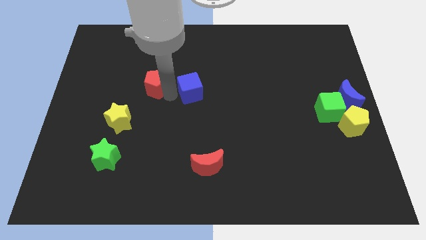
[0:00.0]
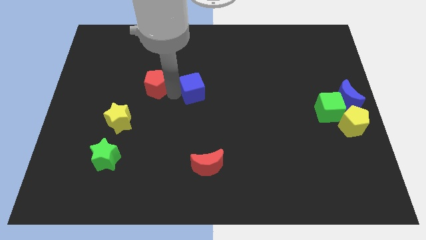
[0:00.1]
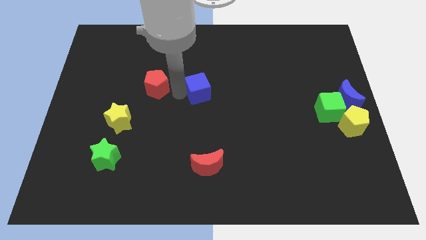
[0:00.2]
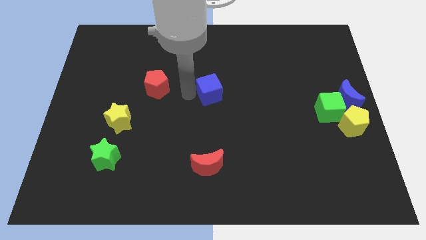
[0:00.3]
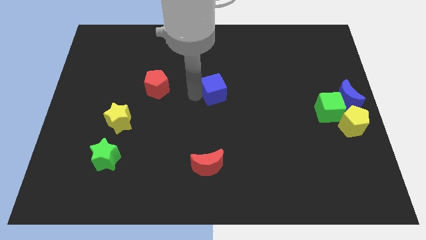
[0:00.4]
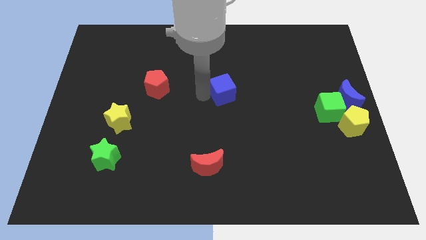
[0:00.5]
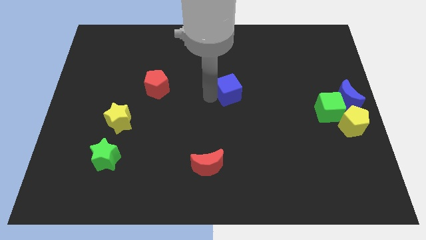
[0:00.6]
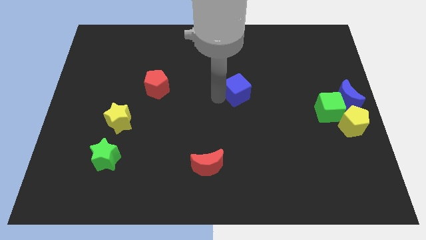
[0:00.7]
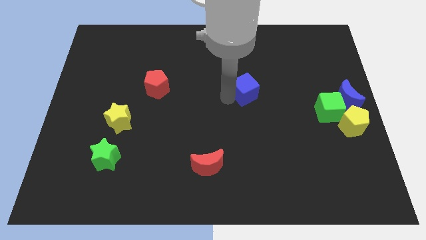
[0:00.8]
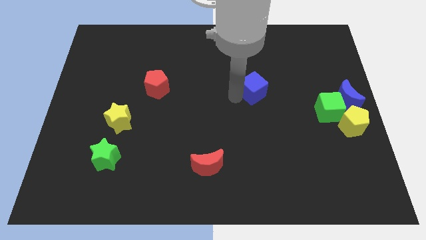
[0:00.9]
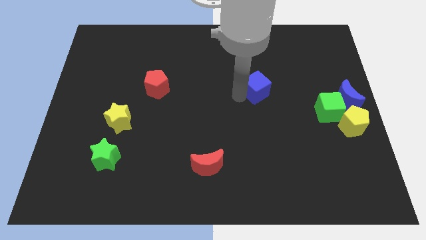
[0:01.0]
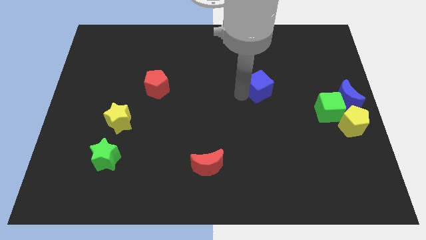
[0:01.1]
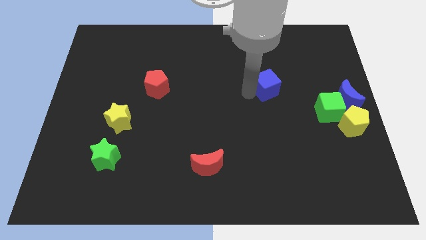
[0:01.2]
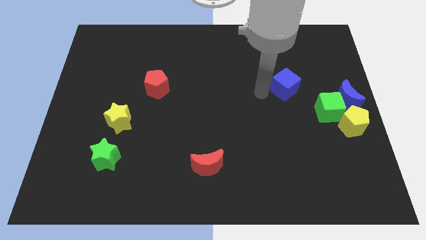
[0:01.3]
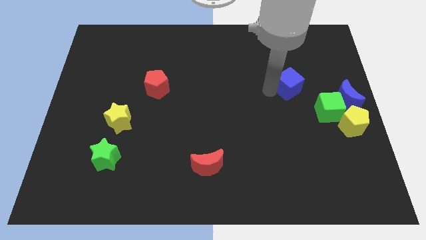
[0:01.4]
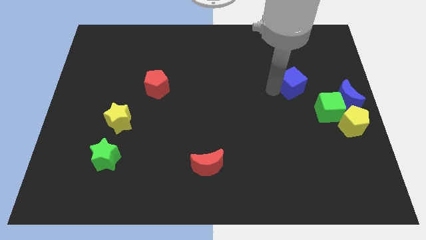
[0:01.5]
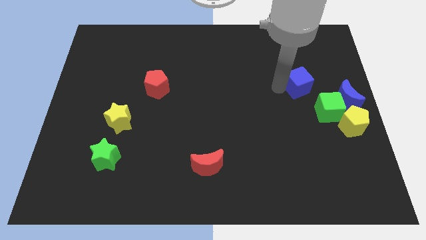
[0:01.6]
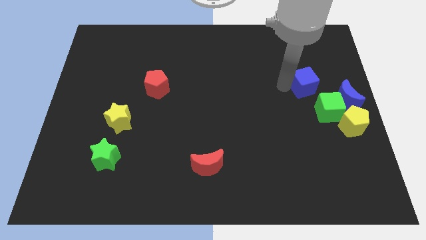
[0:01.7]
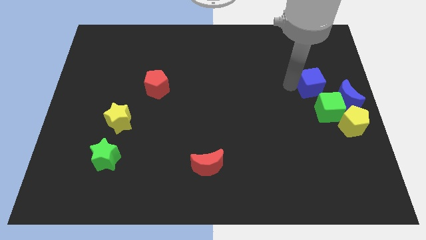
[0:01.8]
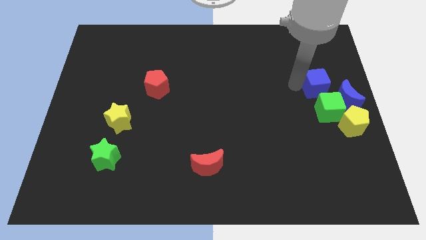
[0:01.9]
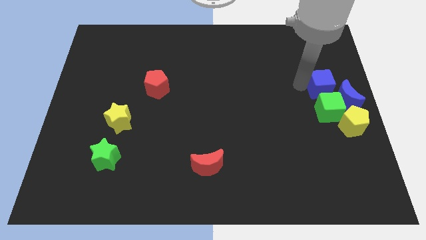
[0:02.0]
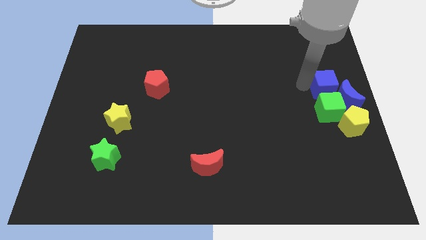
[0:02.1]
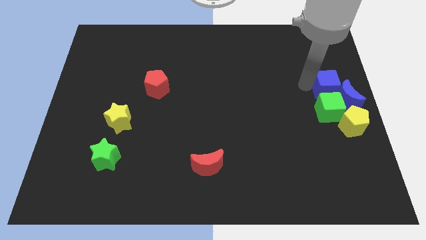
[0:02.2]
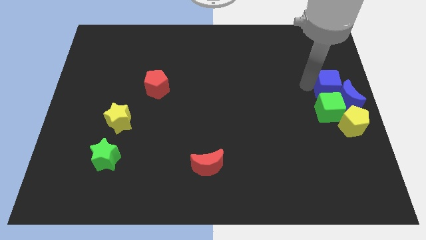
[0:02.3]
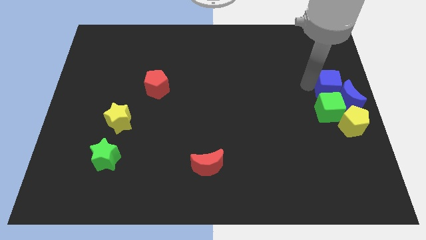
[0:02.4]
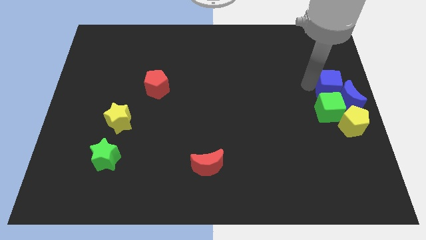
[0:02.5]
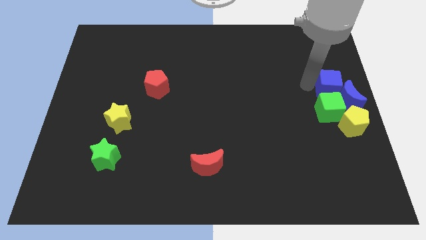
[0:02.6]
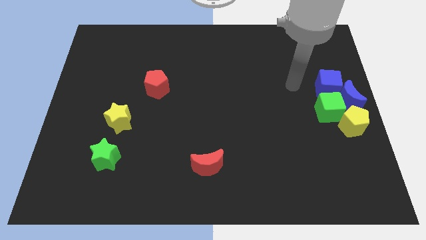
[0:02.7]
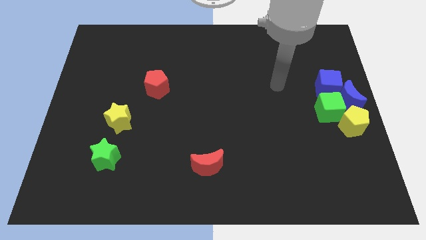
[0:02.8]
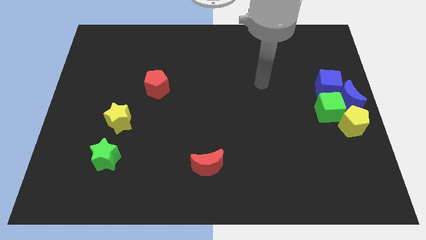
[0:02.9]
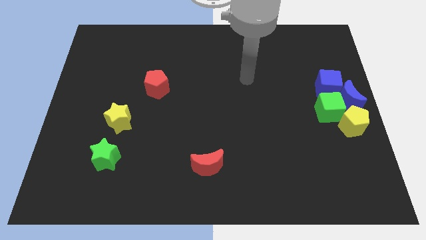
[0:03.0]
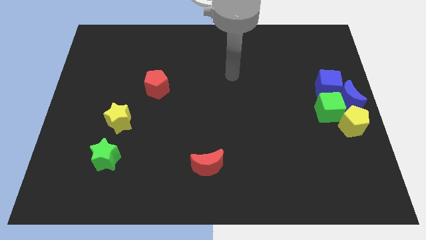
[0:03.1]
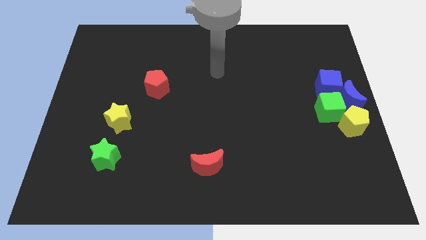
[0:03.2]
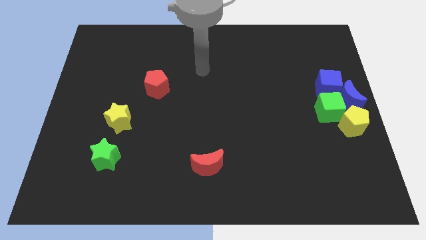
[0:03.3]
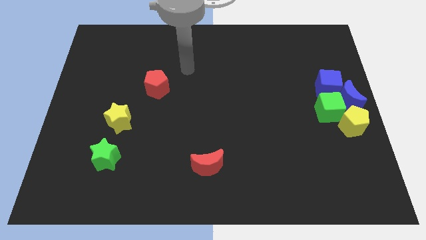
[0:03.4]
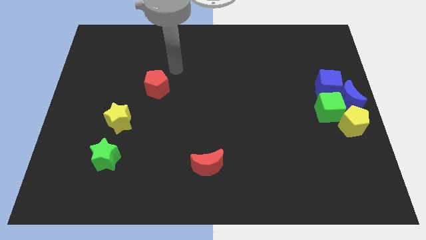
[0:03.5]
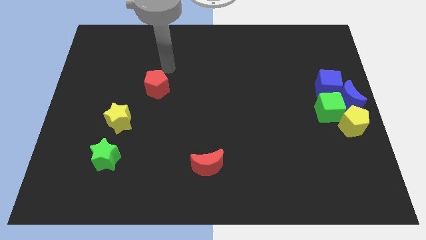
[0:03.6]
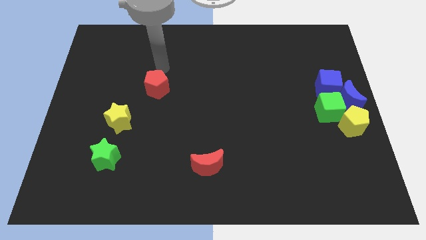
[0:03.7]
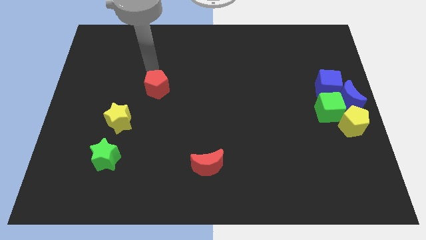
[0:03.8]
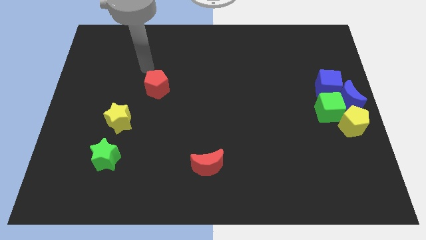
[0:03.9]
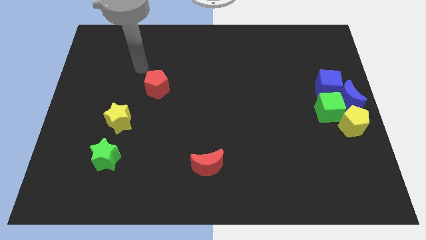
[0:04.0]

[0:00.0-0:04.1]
separate blue cube from the red pentagon

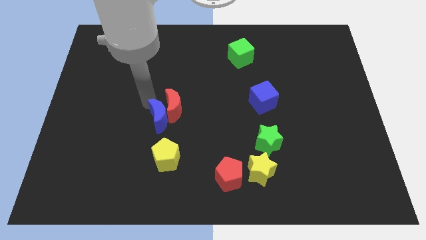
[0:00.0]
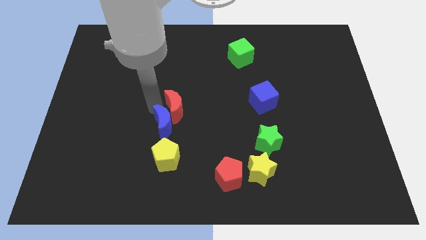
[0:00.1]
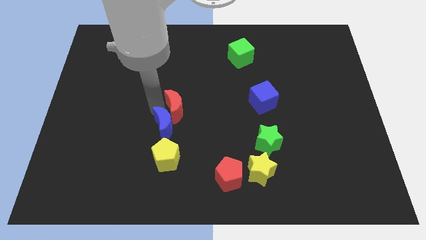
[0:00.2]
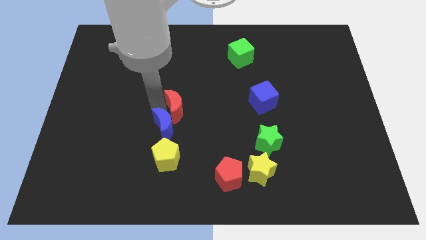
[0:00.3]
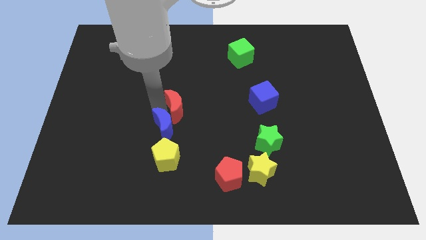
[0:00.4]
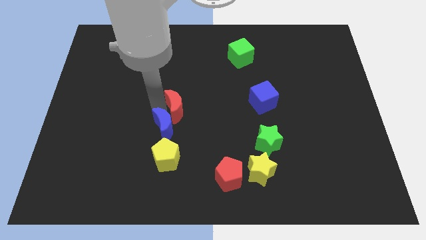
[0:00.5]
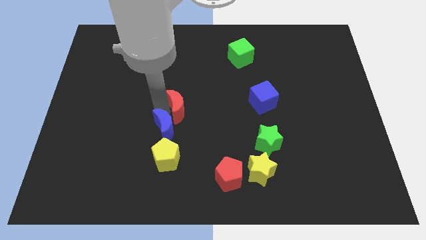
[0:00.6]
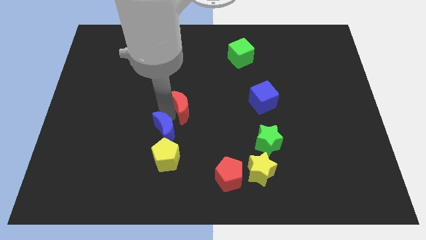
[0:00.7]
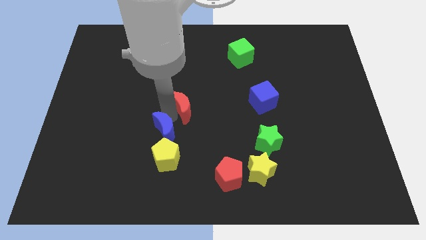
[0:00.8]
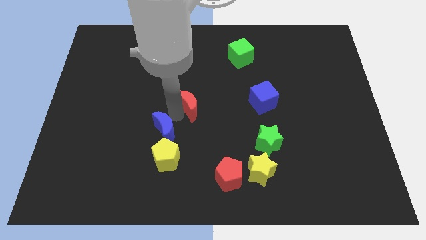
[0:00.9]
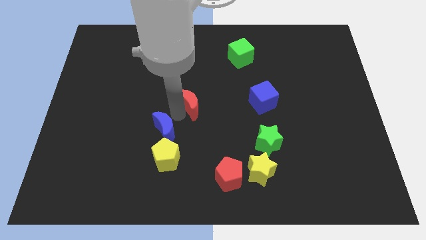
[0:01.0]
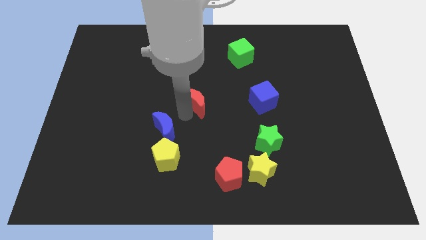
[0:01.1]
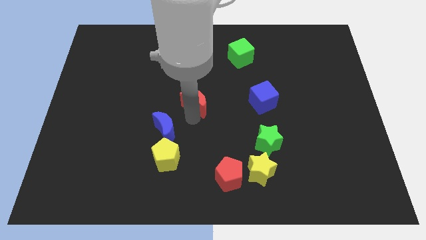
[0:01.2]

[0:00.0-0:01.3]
separate the red moon and the blue moon

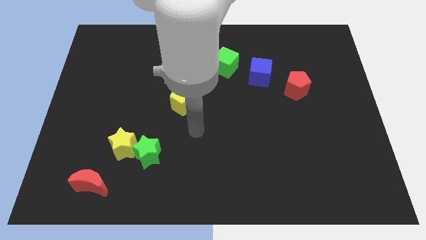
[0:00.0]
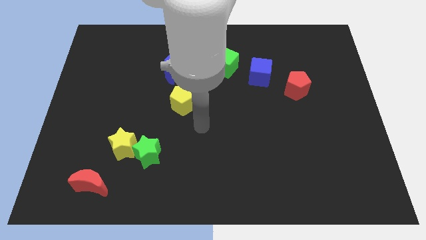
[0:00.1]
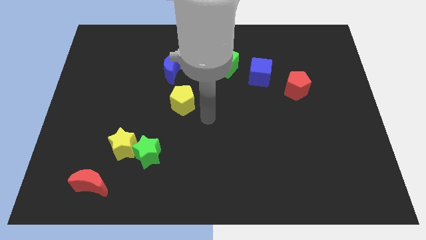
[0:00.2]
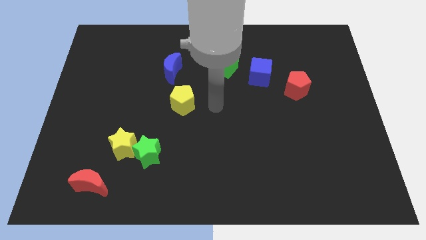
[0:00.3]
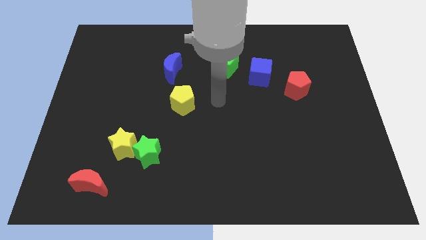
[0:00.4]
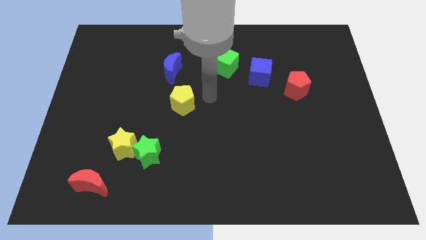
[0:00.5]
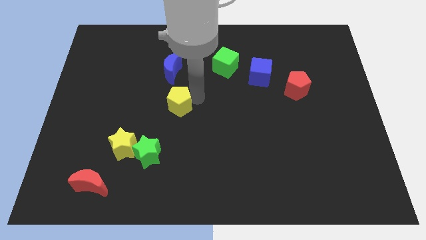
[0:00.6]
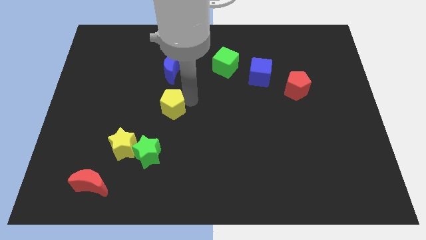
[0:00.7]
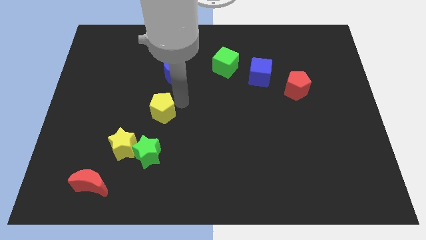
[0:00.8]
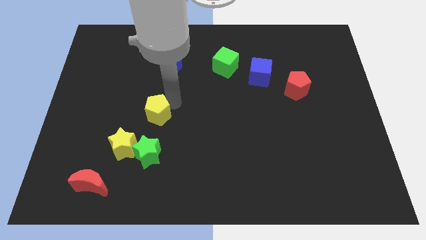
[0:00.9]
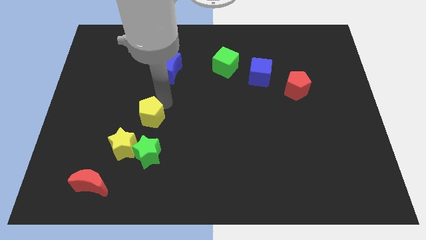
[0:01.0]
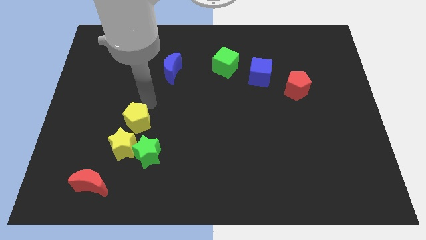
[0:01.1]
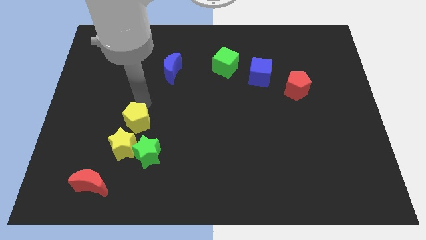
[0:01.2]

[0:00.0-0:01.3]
move the yellow pentagon above the yellow star

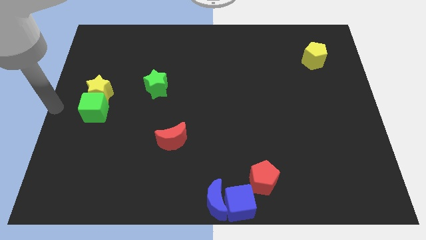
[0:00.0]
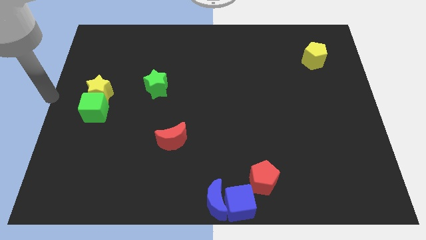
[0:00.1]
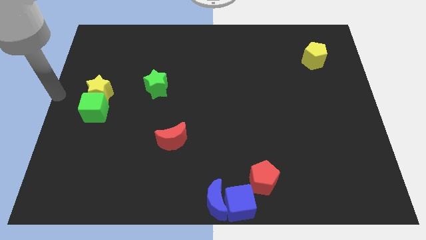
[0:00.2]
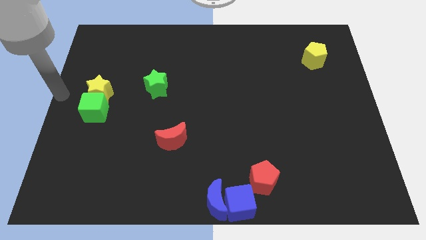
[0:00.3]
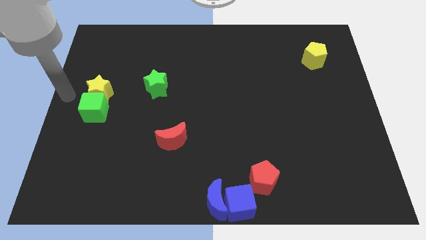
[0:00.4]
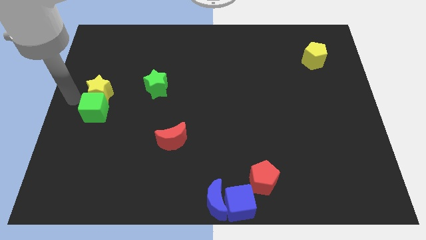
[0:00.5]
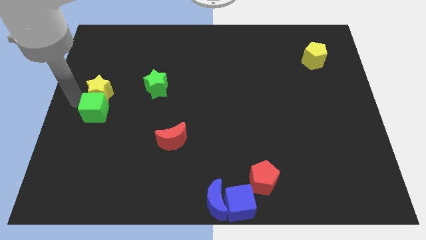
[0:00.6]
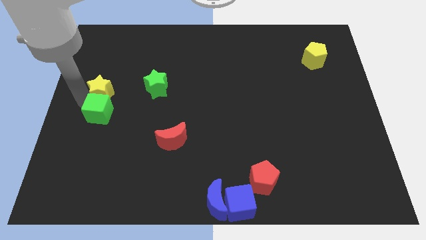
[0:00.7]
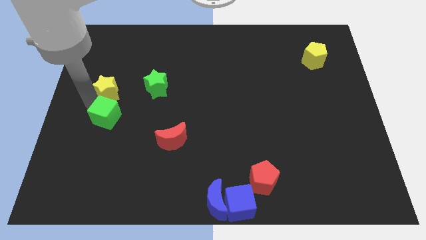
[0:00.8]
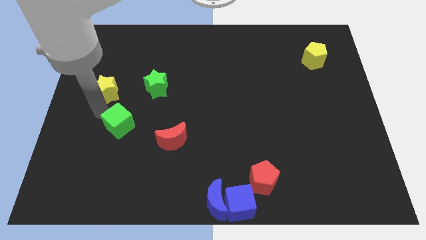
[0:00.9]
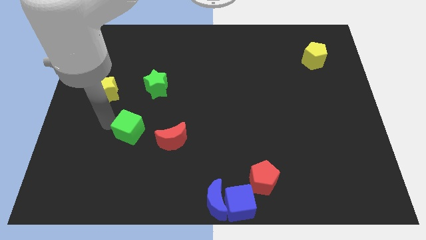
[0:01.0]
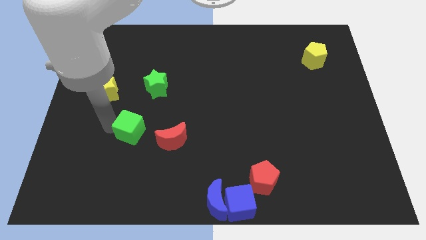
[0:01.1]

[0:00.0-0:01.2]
separate the green cube from the yellow star

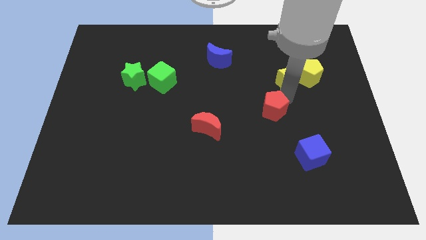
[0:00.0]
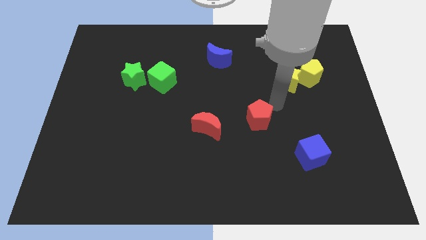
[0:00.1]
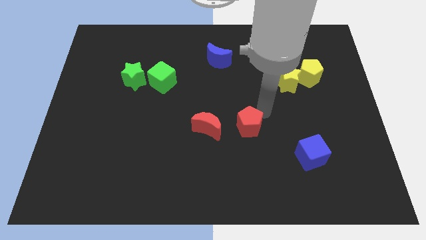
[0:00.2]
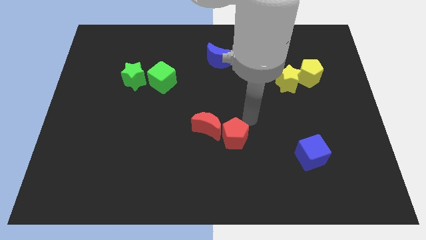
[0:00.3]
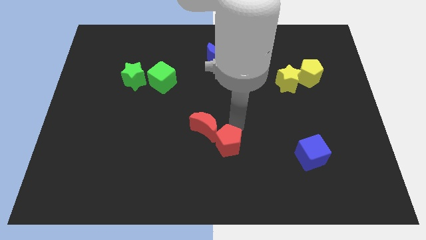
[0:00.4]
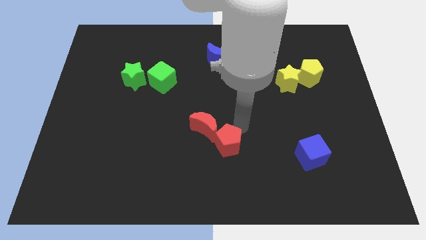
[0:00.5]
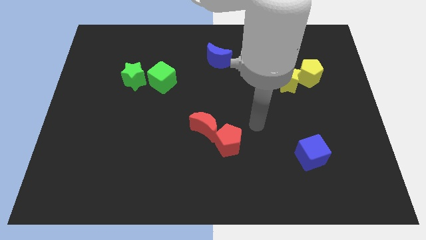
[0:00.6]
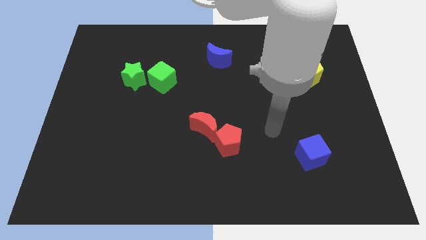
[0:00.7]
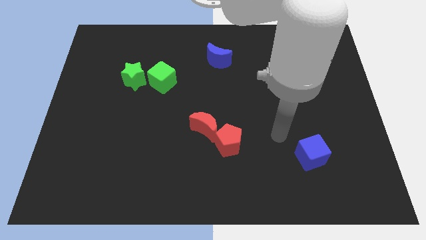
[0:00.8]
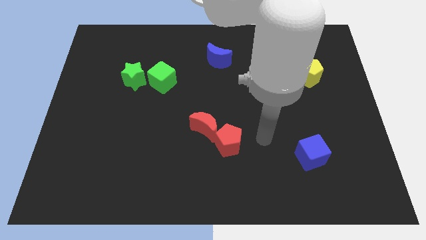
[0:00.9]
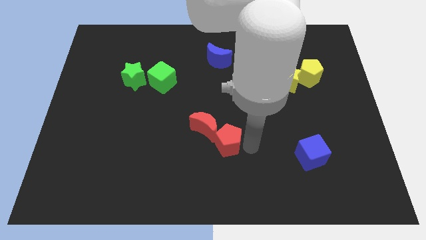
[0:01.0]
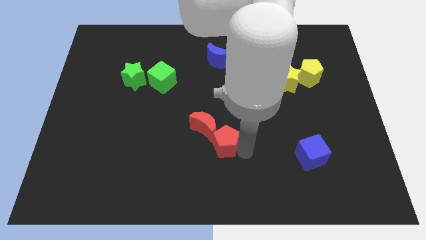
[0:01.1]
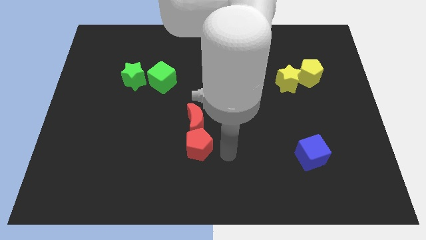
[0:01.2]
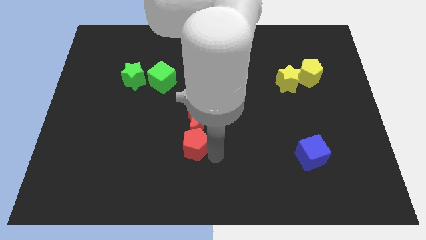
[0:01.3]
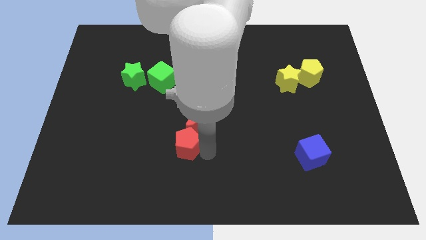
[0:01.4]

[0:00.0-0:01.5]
place the red pentagon below the red crescent
